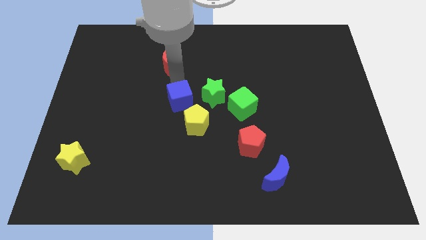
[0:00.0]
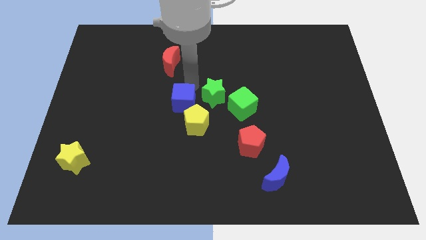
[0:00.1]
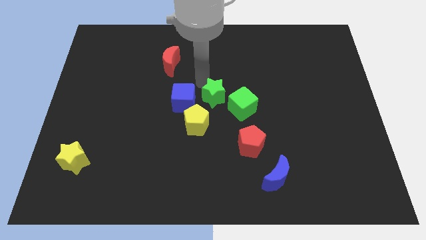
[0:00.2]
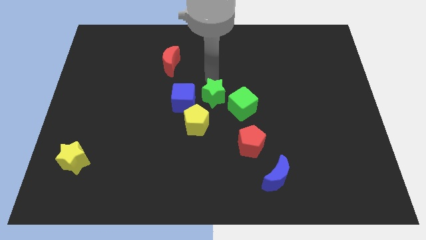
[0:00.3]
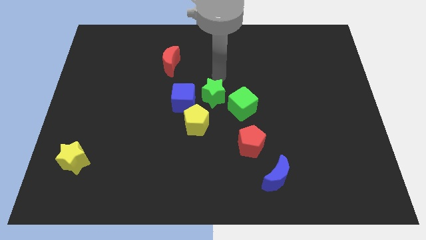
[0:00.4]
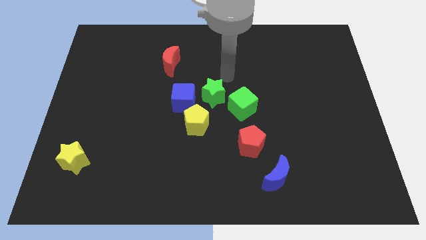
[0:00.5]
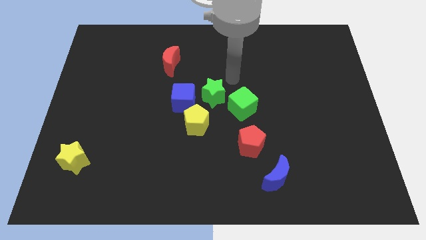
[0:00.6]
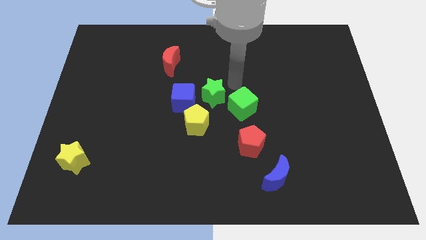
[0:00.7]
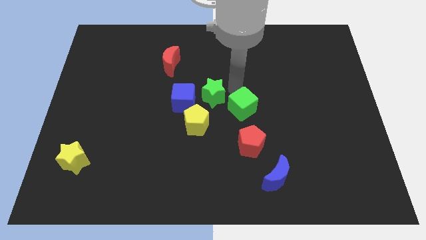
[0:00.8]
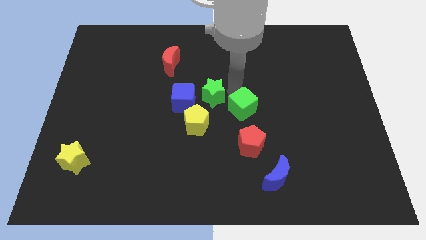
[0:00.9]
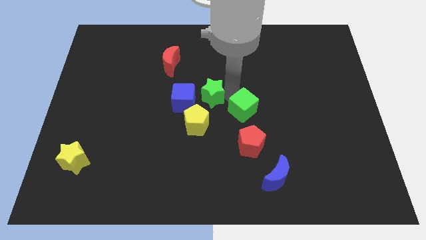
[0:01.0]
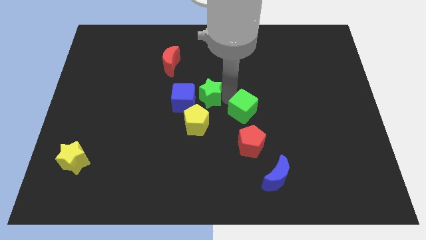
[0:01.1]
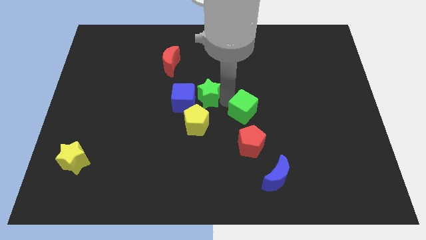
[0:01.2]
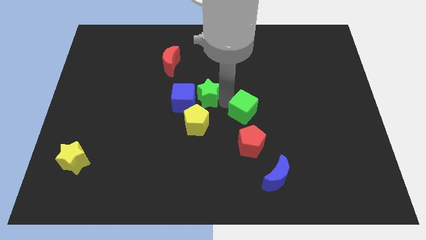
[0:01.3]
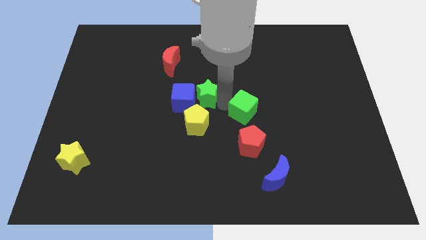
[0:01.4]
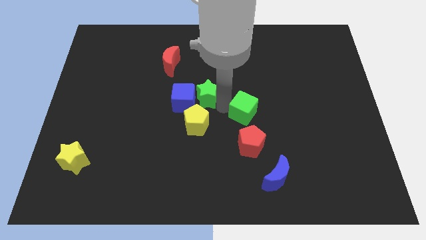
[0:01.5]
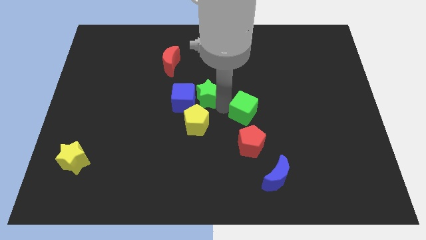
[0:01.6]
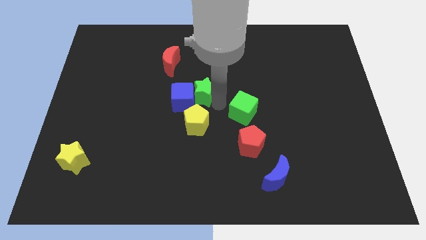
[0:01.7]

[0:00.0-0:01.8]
move your arm between the green blocks

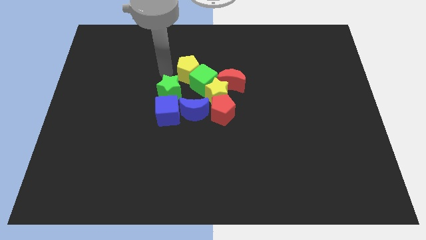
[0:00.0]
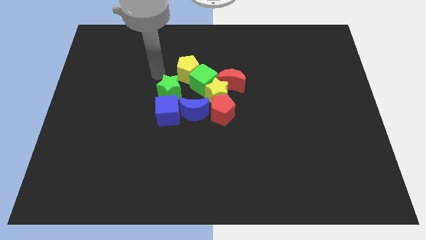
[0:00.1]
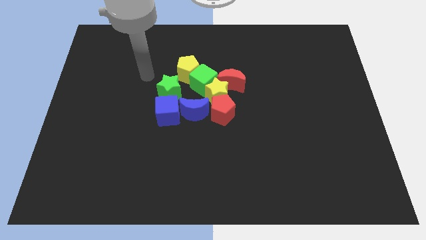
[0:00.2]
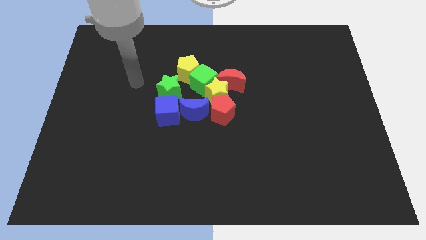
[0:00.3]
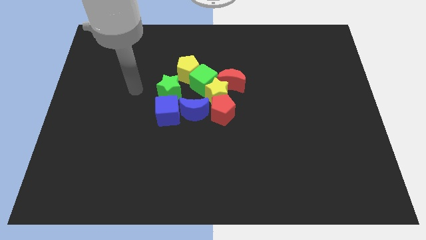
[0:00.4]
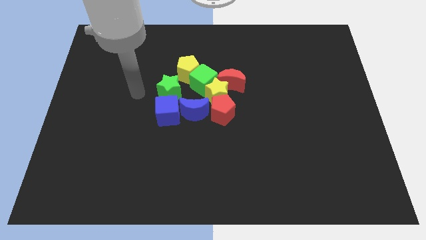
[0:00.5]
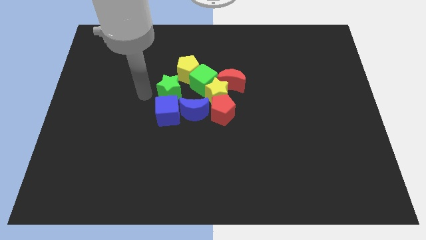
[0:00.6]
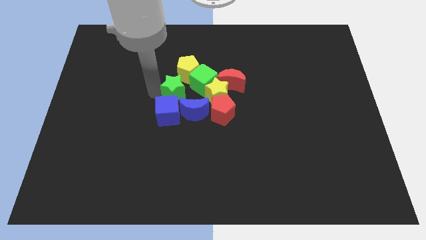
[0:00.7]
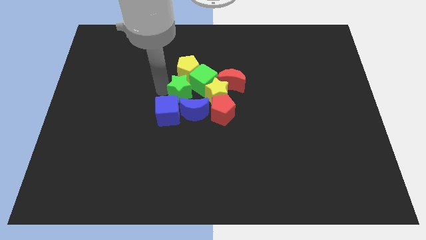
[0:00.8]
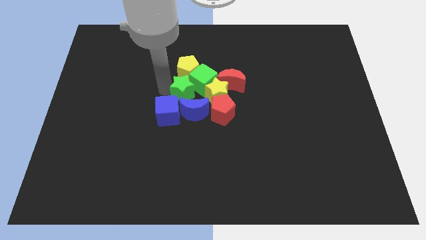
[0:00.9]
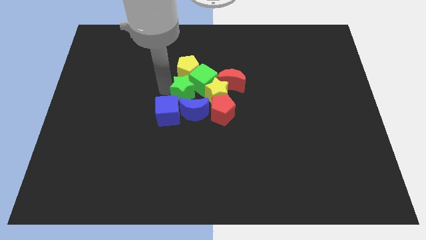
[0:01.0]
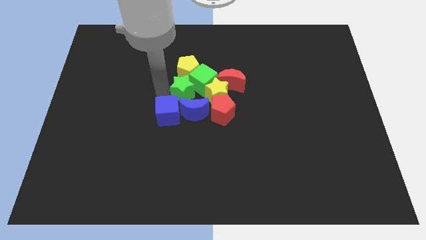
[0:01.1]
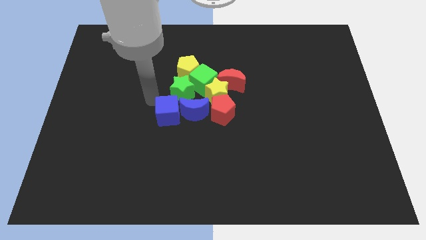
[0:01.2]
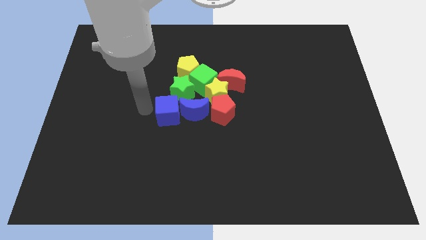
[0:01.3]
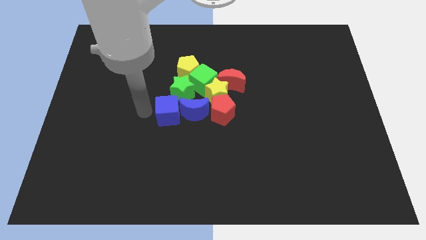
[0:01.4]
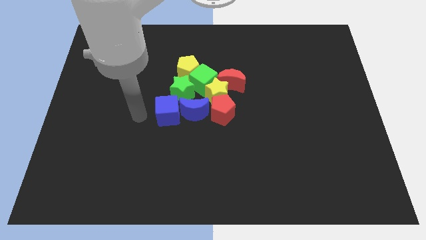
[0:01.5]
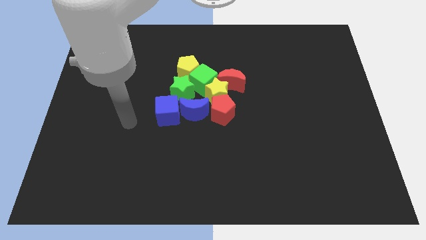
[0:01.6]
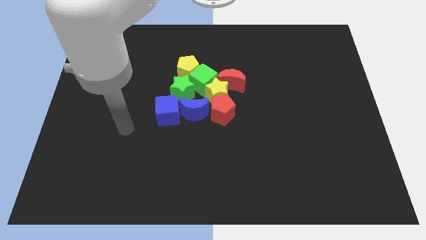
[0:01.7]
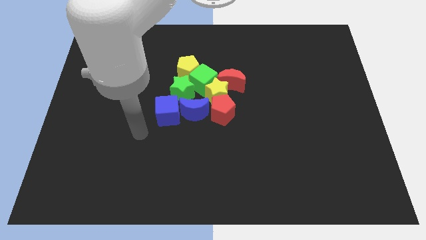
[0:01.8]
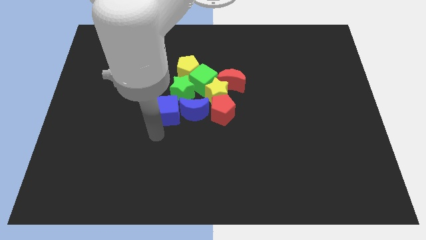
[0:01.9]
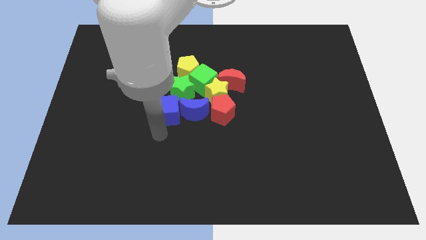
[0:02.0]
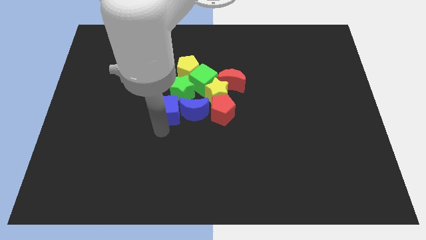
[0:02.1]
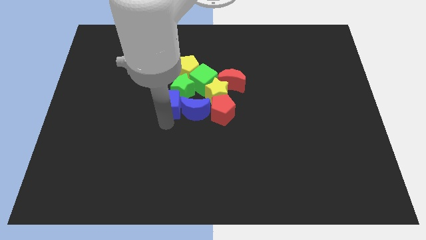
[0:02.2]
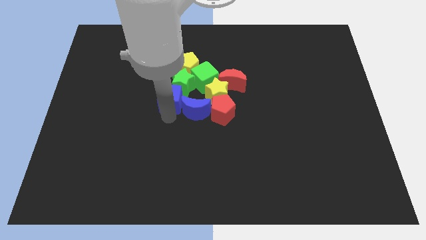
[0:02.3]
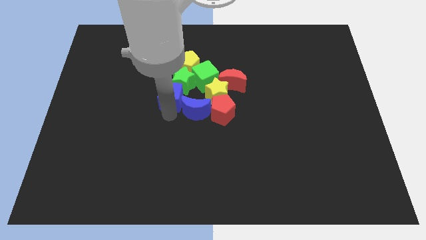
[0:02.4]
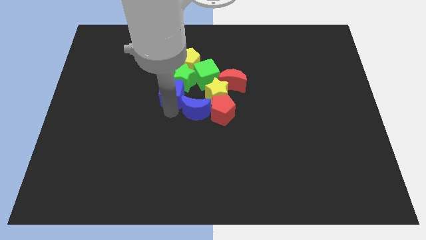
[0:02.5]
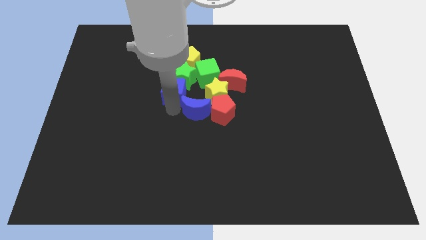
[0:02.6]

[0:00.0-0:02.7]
move the green star and the blue cube into the group of blocks

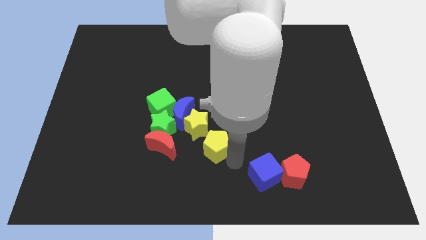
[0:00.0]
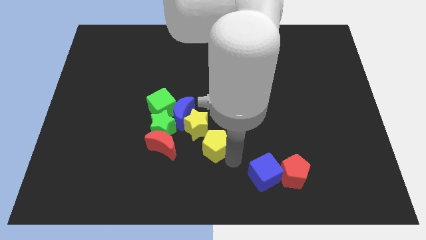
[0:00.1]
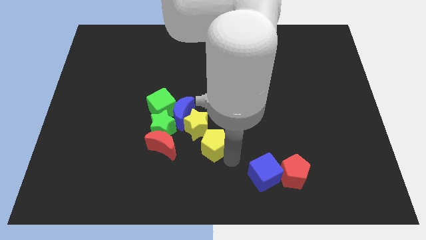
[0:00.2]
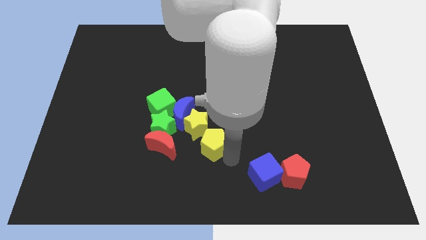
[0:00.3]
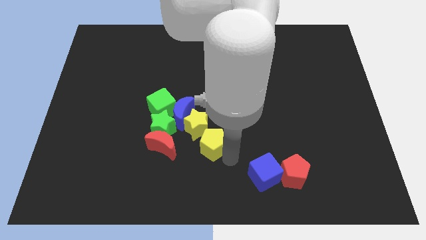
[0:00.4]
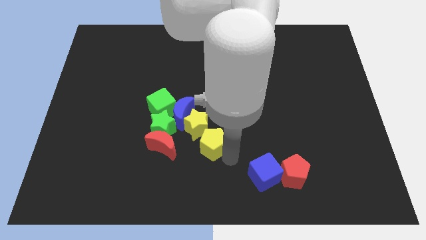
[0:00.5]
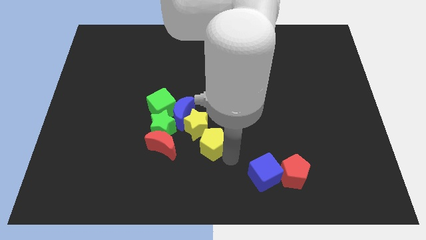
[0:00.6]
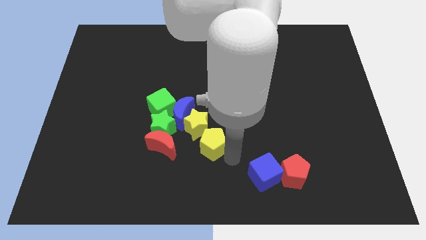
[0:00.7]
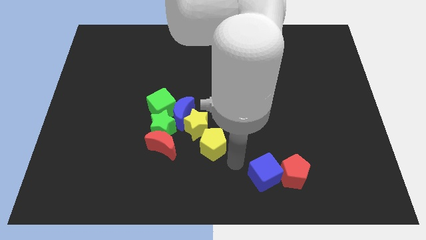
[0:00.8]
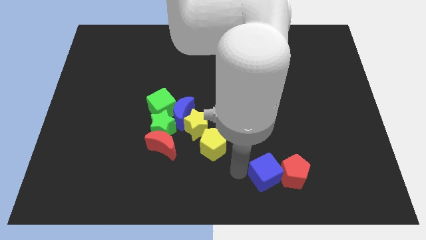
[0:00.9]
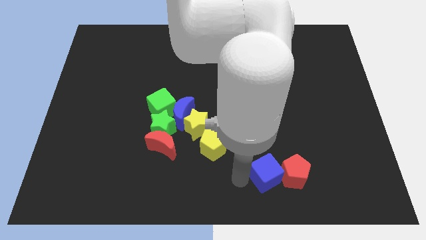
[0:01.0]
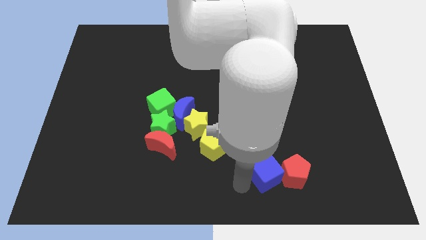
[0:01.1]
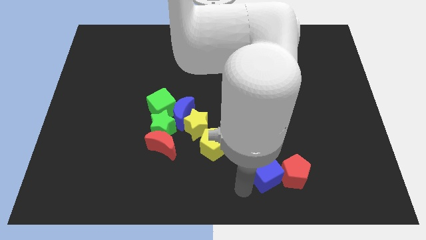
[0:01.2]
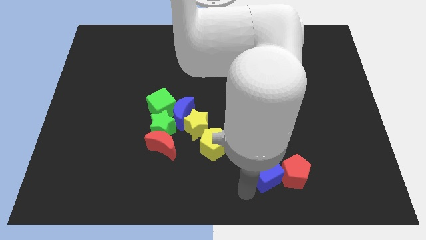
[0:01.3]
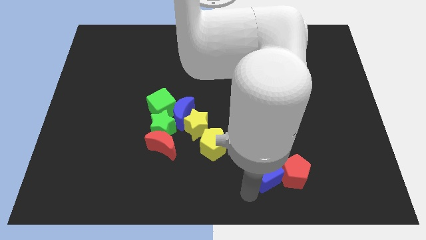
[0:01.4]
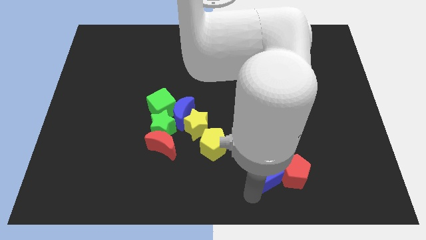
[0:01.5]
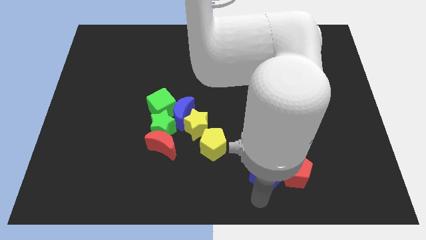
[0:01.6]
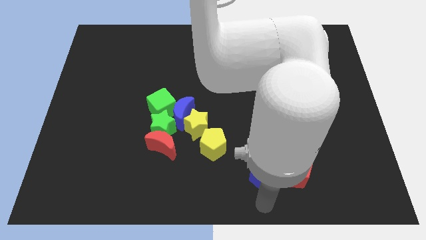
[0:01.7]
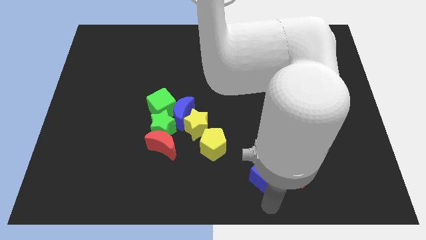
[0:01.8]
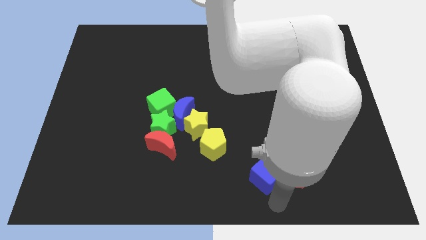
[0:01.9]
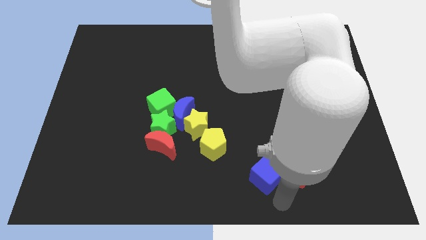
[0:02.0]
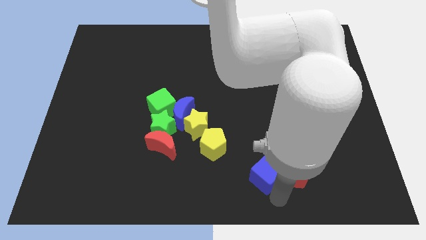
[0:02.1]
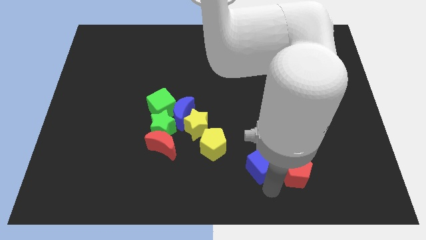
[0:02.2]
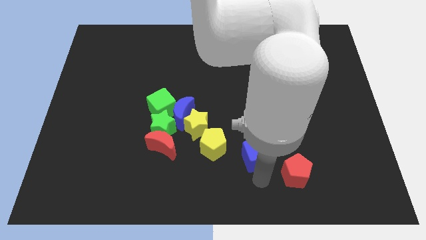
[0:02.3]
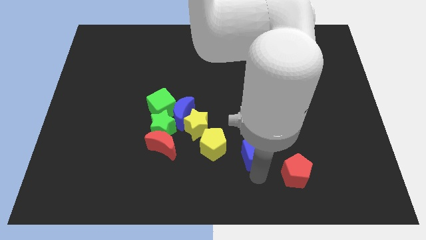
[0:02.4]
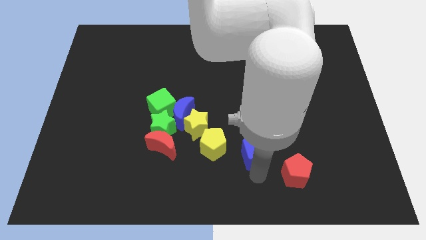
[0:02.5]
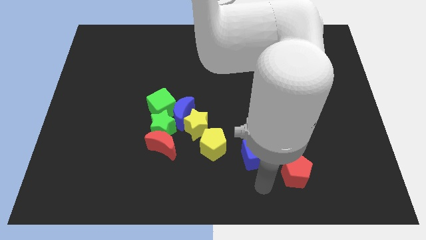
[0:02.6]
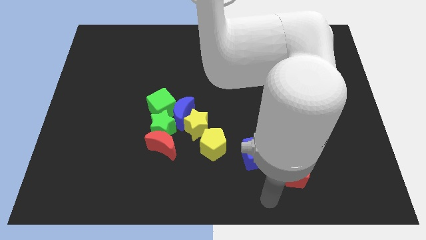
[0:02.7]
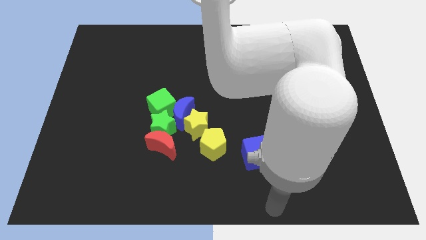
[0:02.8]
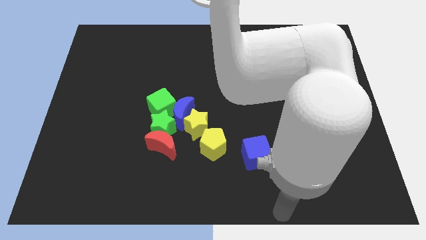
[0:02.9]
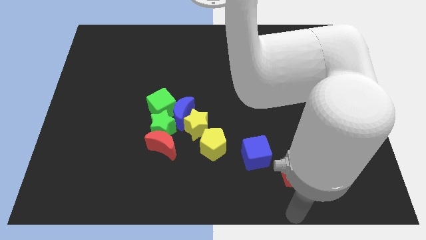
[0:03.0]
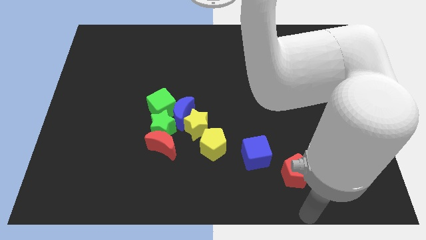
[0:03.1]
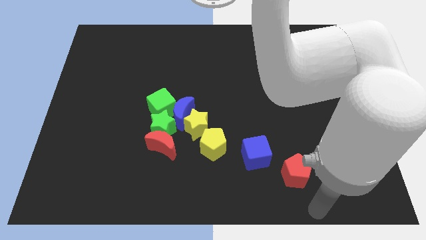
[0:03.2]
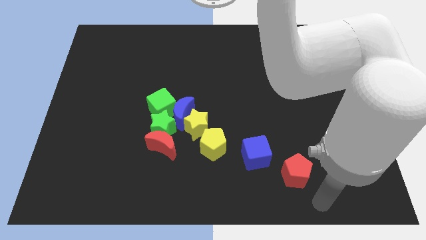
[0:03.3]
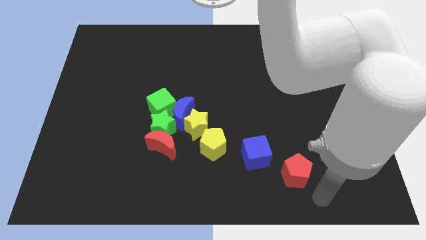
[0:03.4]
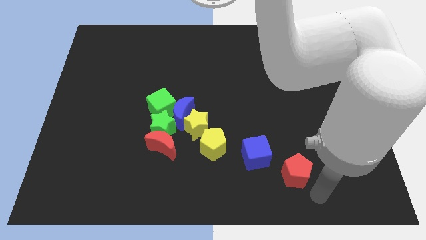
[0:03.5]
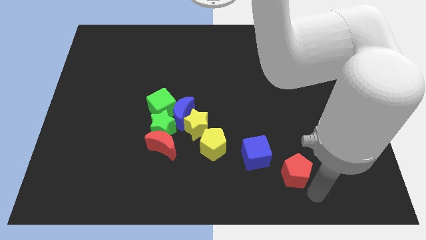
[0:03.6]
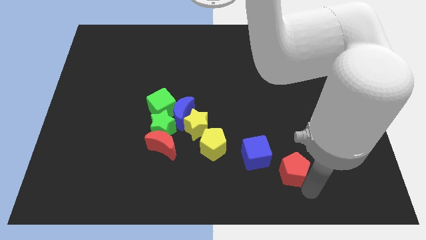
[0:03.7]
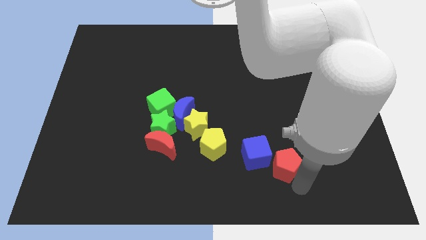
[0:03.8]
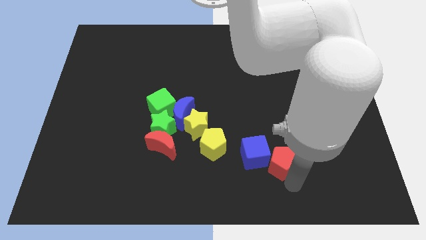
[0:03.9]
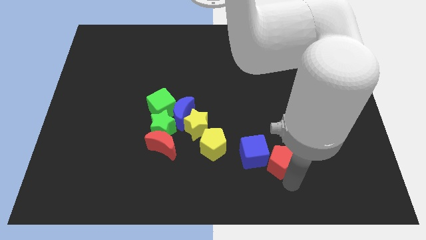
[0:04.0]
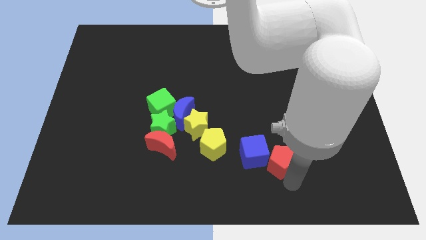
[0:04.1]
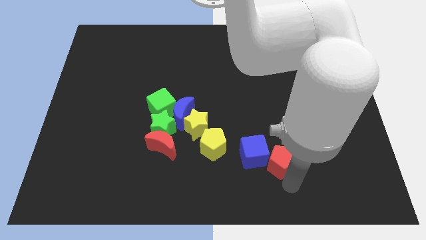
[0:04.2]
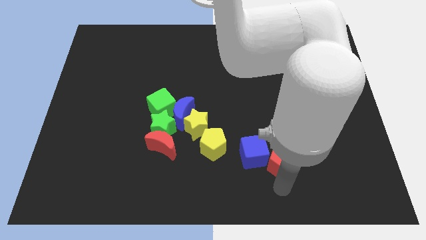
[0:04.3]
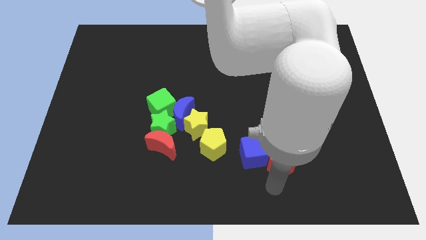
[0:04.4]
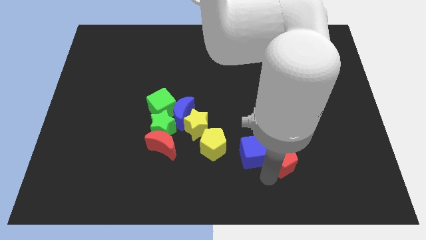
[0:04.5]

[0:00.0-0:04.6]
push the blue cube slightly upwards

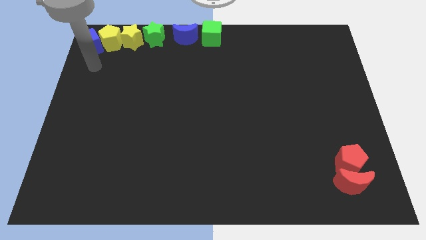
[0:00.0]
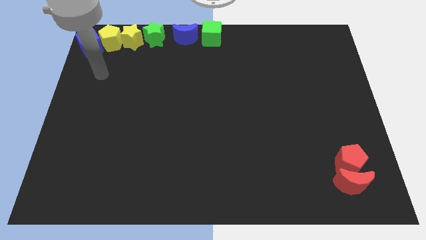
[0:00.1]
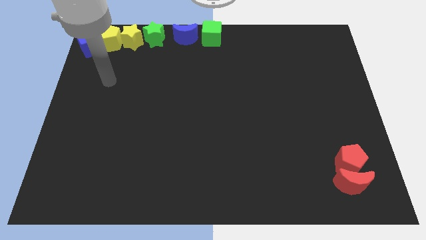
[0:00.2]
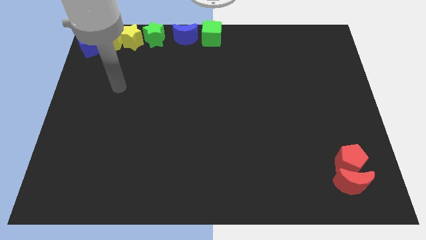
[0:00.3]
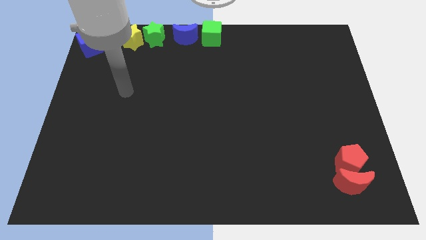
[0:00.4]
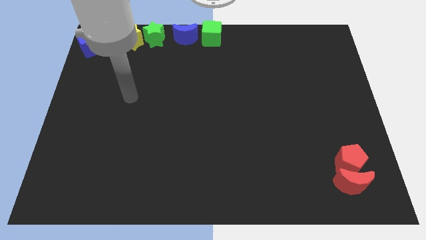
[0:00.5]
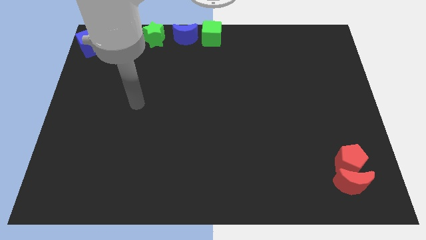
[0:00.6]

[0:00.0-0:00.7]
move the arm away from the blue cube
